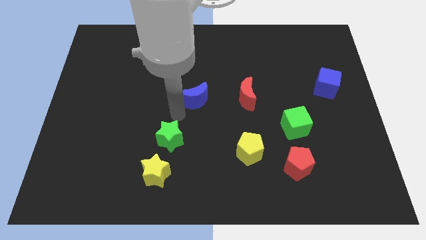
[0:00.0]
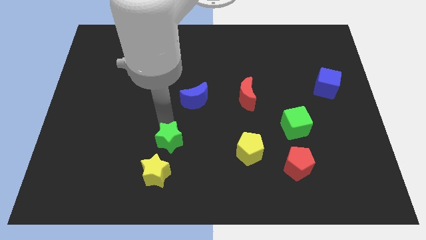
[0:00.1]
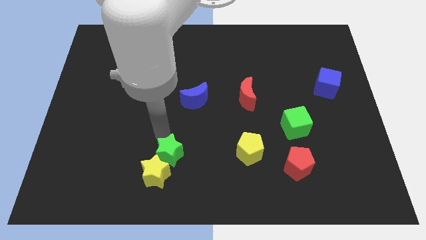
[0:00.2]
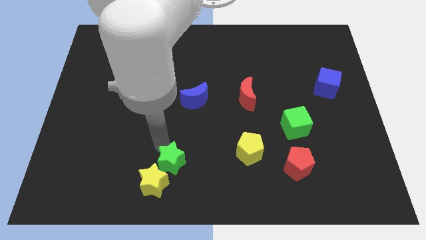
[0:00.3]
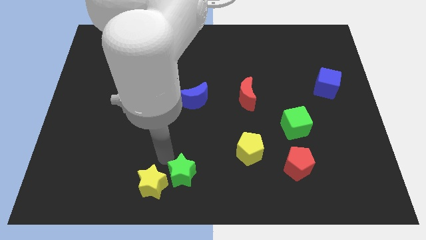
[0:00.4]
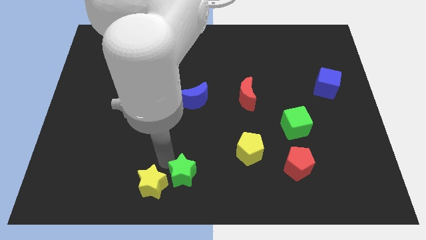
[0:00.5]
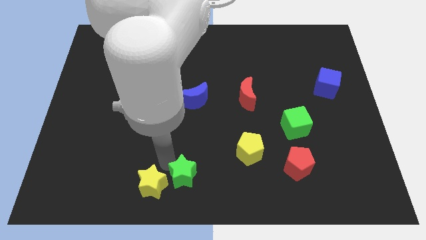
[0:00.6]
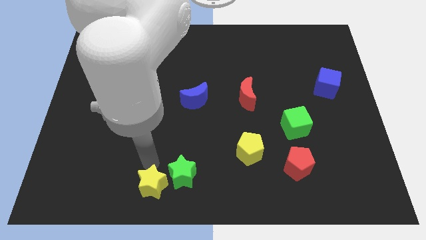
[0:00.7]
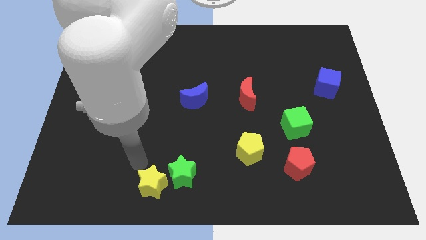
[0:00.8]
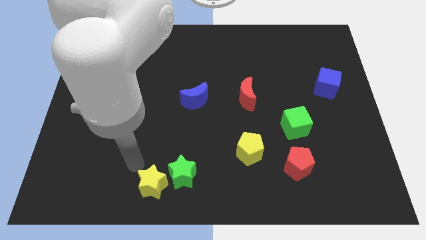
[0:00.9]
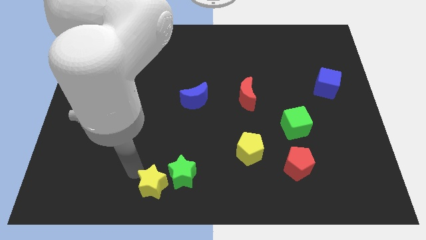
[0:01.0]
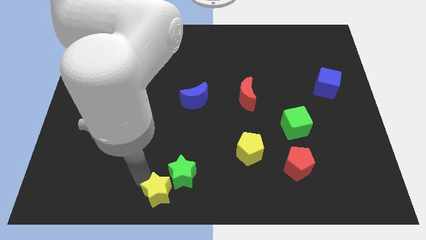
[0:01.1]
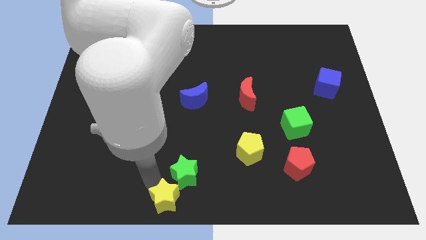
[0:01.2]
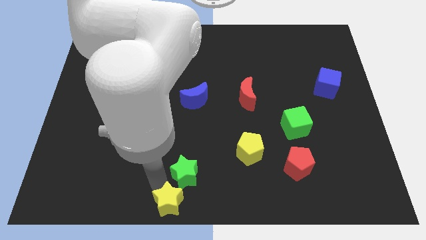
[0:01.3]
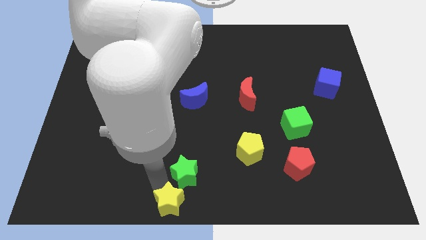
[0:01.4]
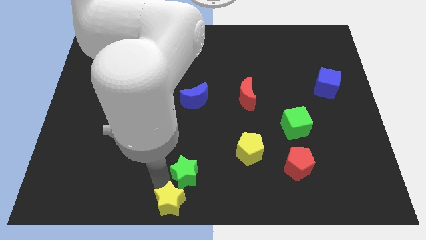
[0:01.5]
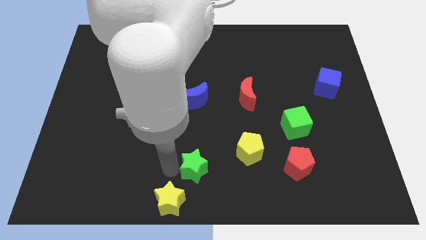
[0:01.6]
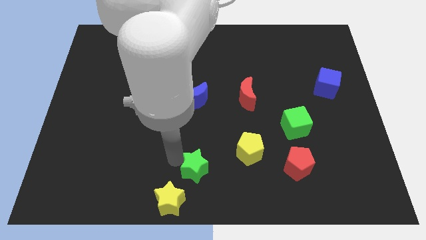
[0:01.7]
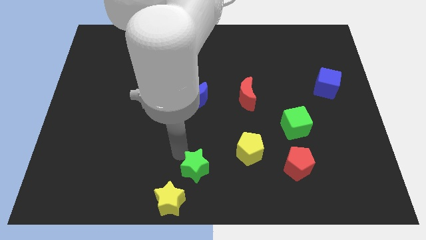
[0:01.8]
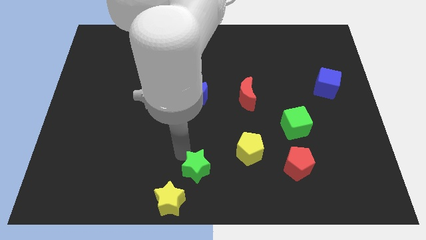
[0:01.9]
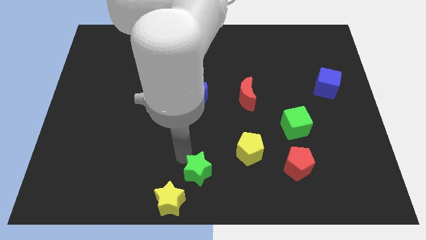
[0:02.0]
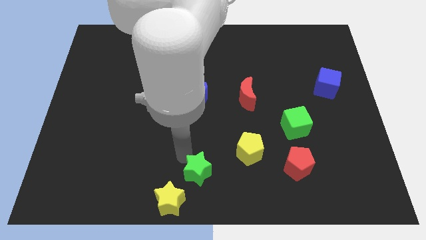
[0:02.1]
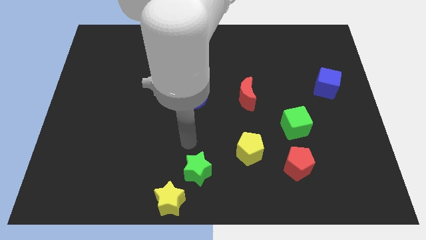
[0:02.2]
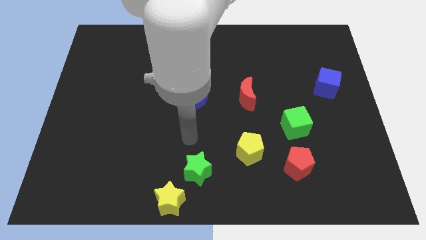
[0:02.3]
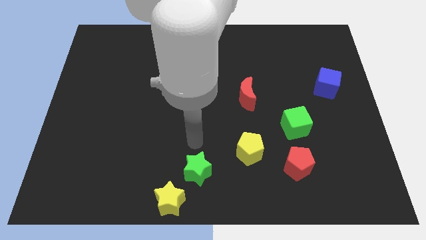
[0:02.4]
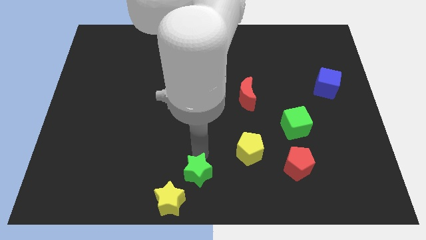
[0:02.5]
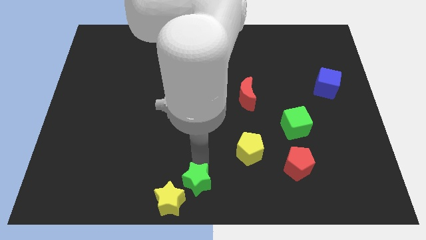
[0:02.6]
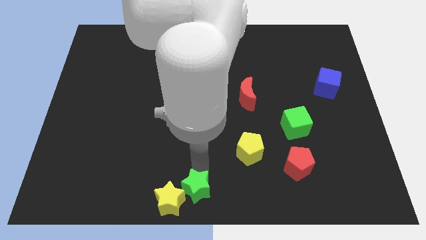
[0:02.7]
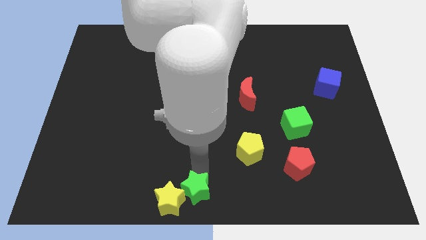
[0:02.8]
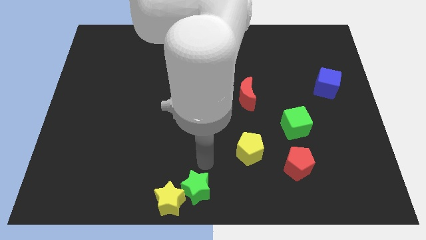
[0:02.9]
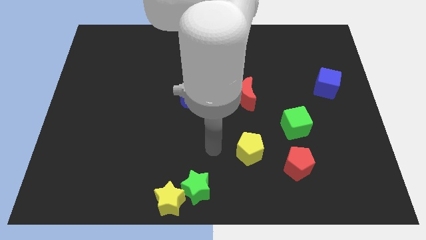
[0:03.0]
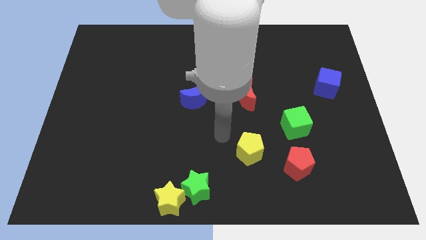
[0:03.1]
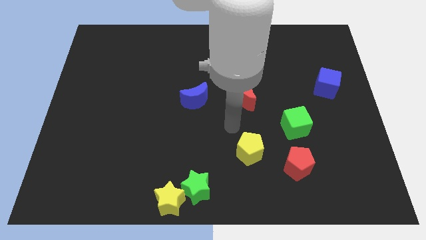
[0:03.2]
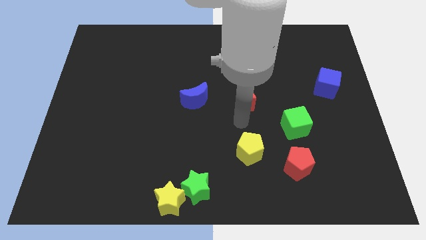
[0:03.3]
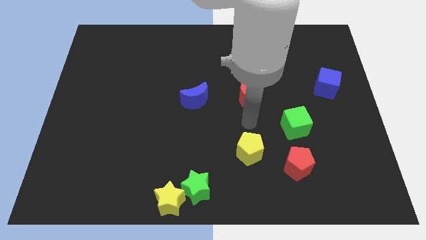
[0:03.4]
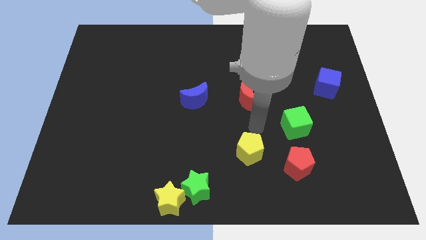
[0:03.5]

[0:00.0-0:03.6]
push the green star to the center bottom of the board

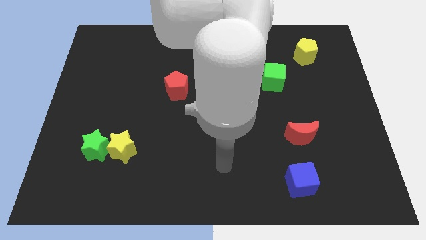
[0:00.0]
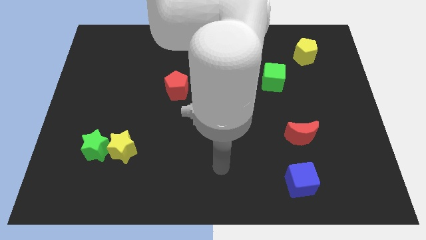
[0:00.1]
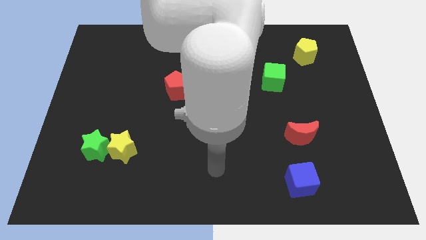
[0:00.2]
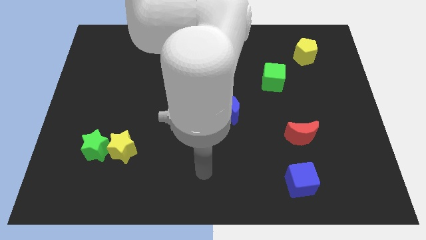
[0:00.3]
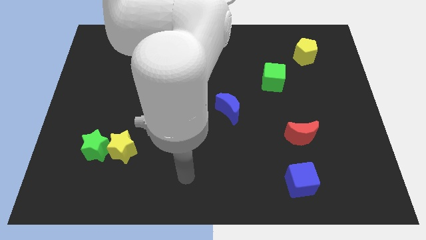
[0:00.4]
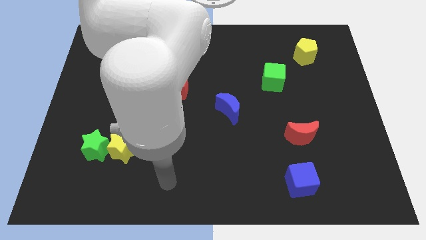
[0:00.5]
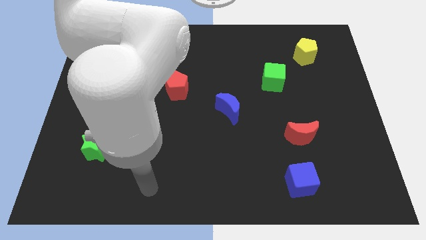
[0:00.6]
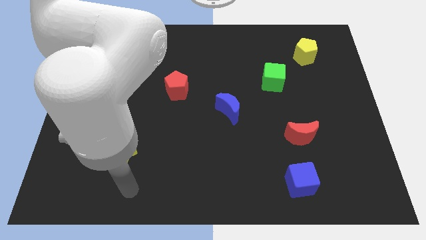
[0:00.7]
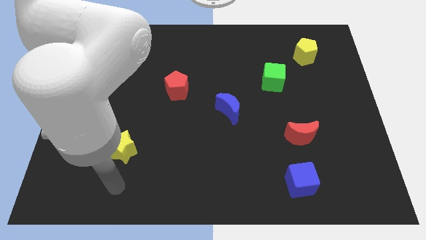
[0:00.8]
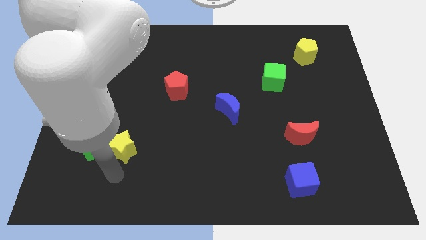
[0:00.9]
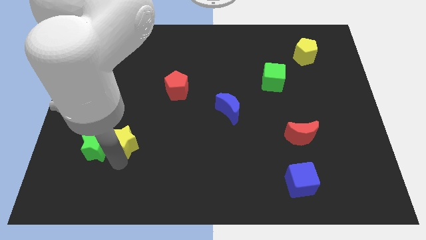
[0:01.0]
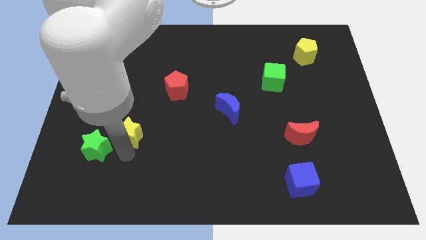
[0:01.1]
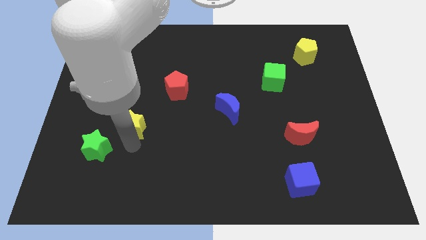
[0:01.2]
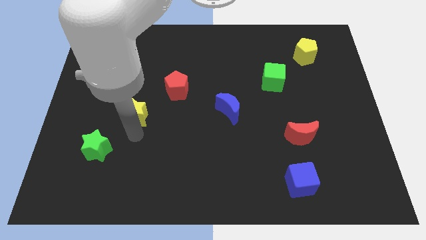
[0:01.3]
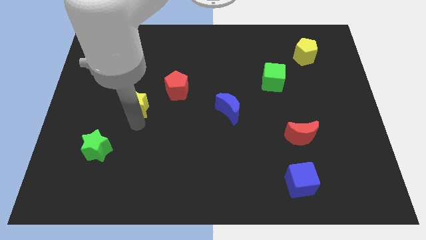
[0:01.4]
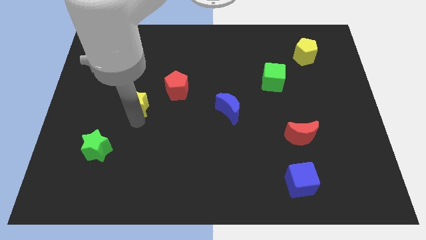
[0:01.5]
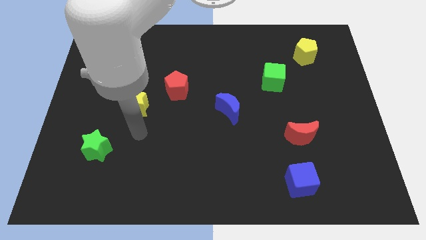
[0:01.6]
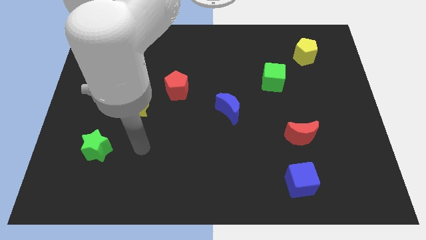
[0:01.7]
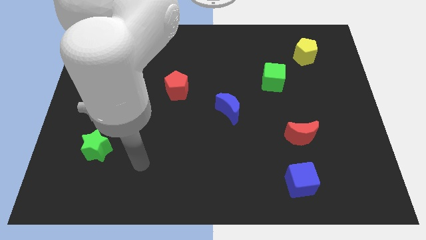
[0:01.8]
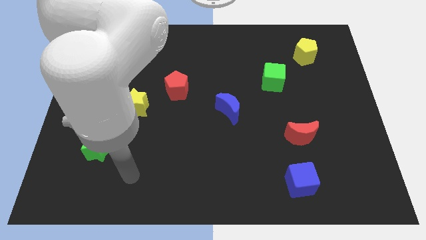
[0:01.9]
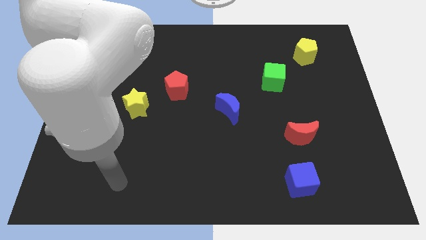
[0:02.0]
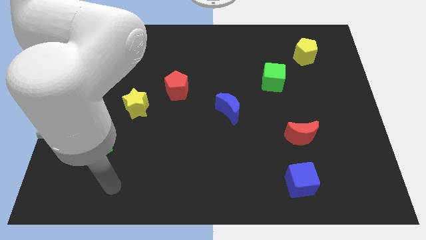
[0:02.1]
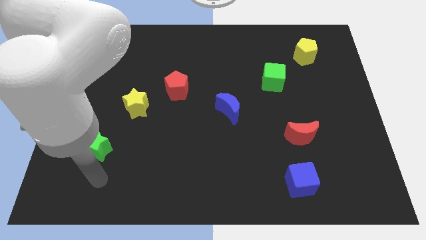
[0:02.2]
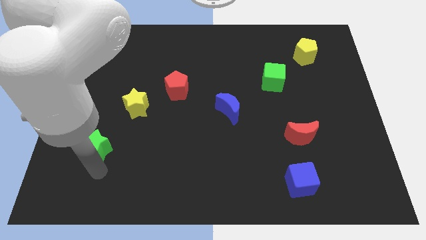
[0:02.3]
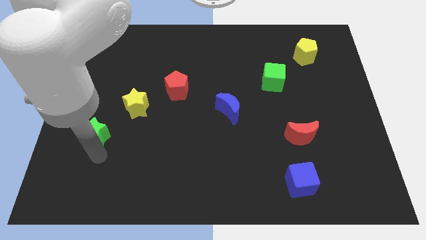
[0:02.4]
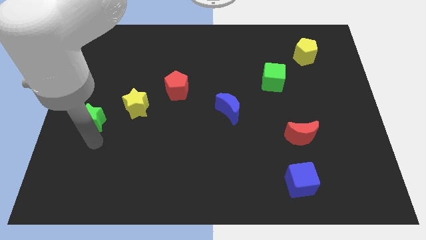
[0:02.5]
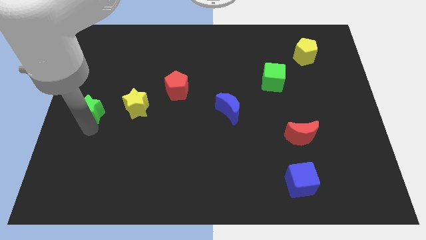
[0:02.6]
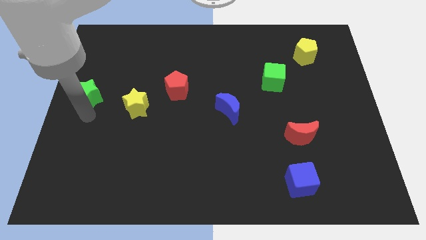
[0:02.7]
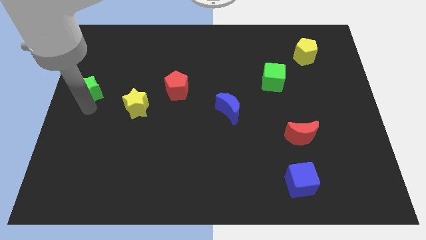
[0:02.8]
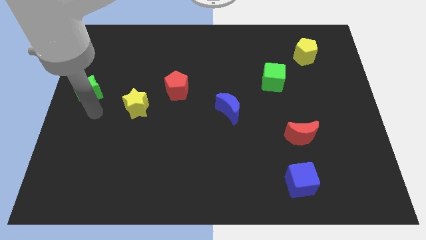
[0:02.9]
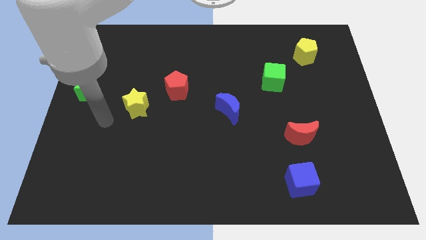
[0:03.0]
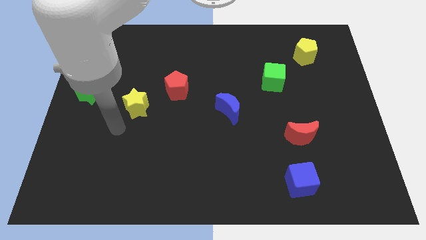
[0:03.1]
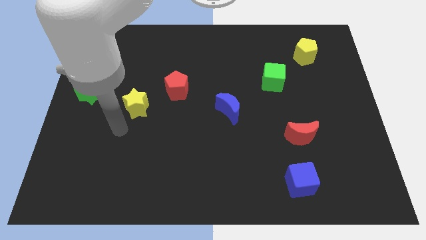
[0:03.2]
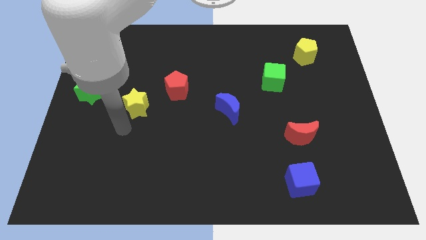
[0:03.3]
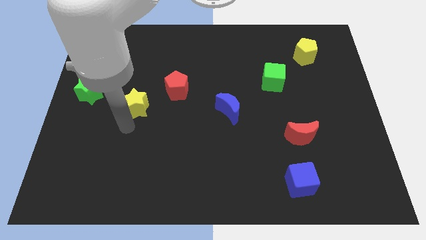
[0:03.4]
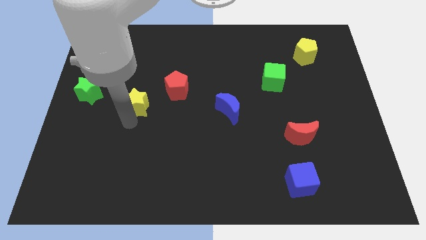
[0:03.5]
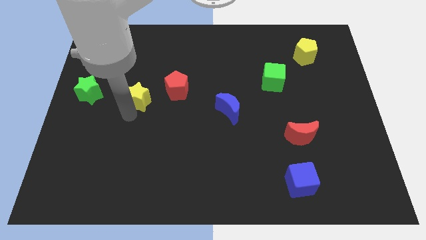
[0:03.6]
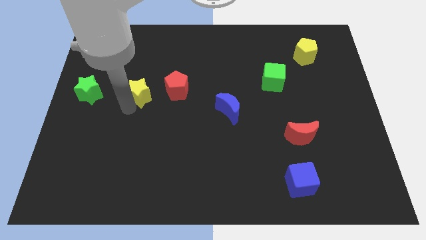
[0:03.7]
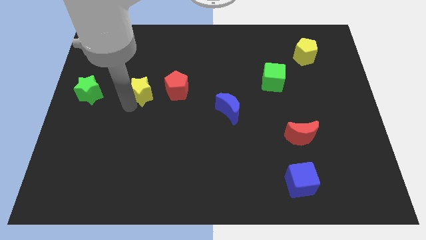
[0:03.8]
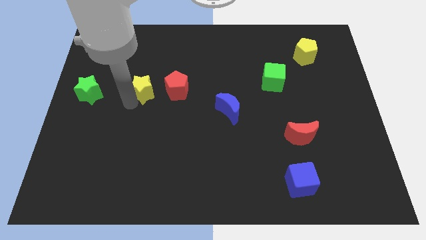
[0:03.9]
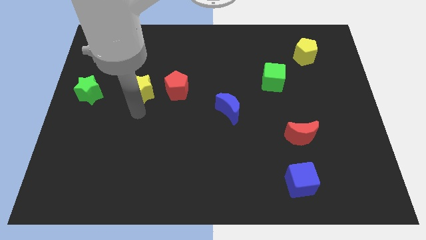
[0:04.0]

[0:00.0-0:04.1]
place the yellow and green star parallel to the red pentagon

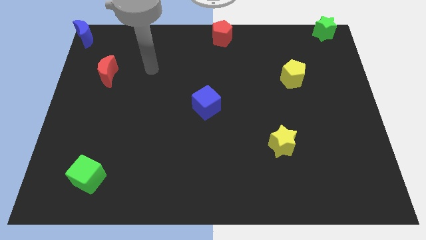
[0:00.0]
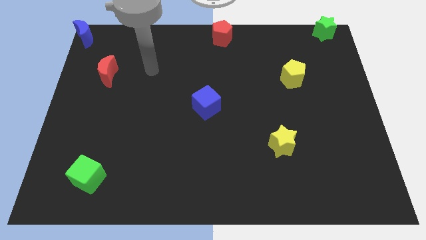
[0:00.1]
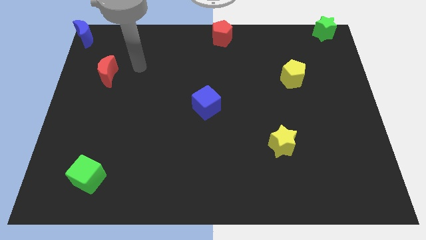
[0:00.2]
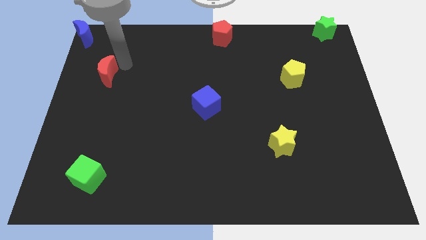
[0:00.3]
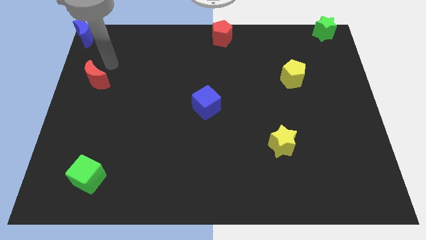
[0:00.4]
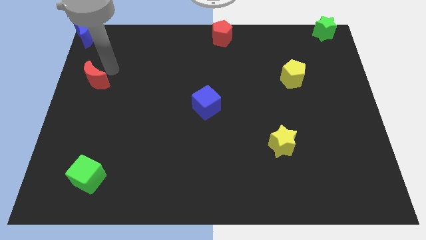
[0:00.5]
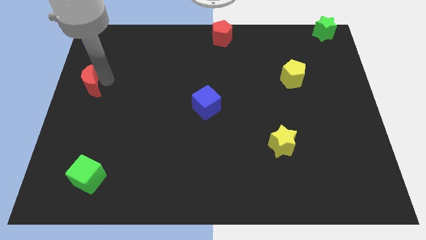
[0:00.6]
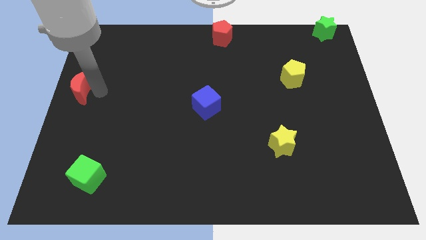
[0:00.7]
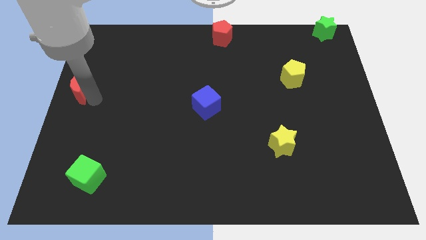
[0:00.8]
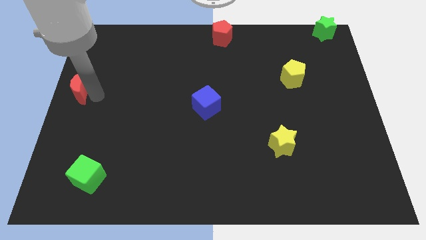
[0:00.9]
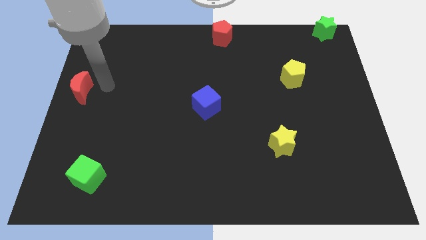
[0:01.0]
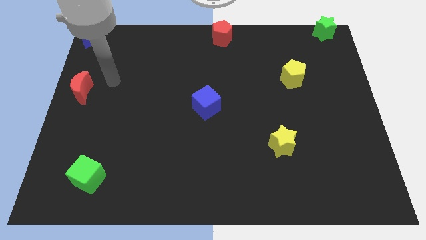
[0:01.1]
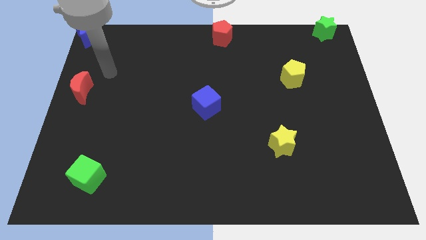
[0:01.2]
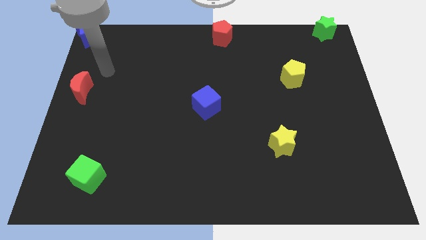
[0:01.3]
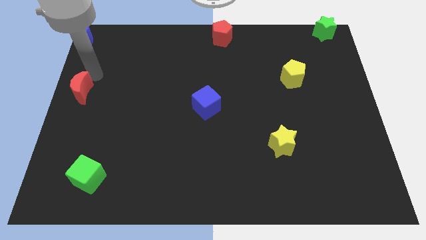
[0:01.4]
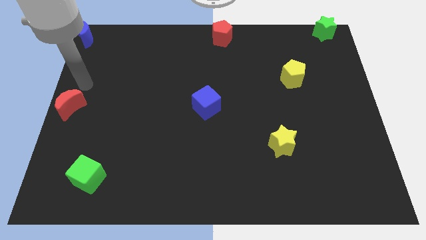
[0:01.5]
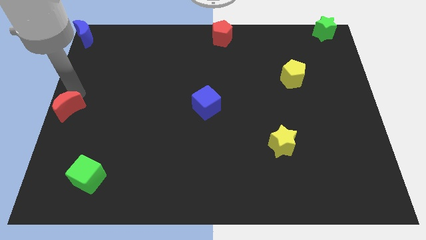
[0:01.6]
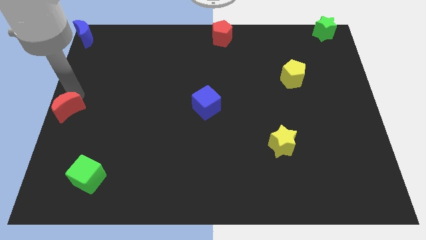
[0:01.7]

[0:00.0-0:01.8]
place the red moon to the left center of the board
